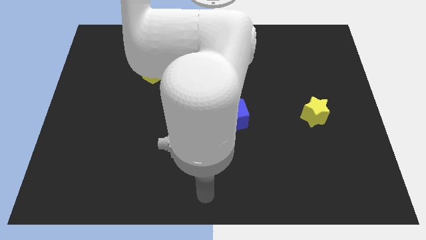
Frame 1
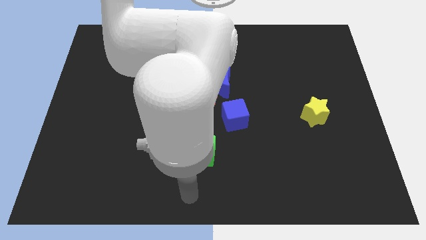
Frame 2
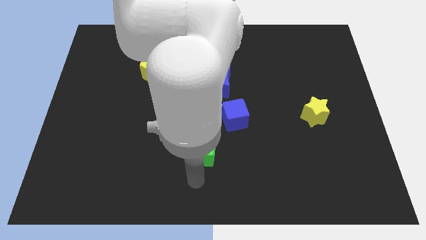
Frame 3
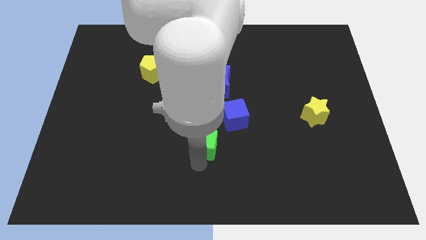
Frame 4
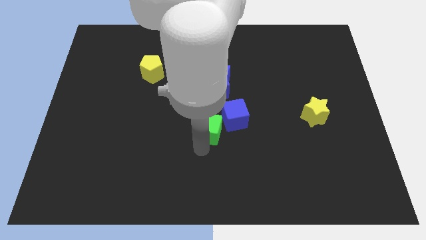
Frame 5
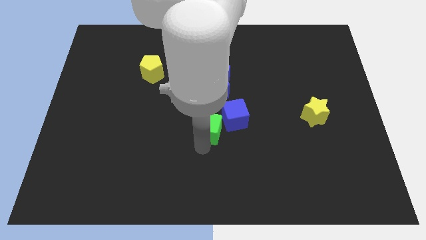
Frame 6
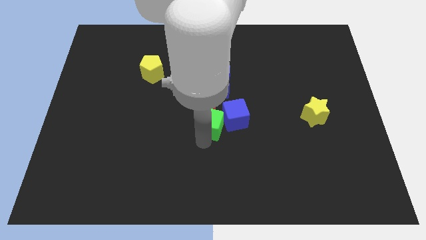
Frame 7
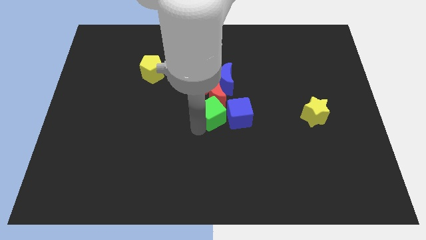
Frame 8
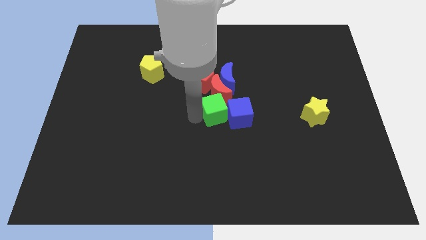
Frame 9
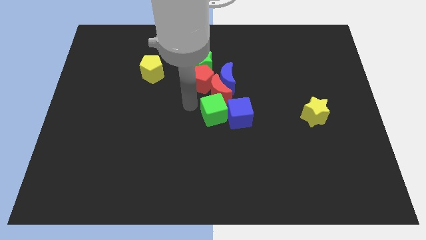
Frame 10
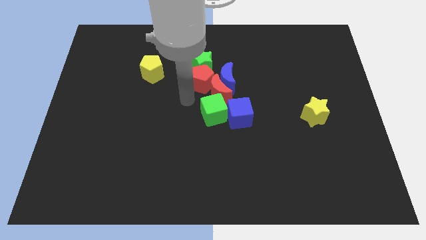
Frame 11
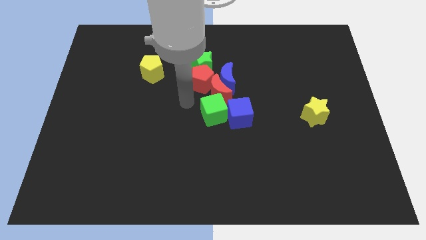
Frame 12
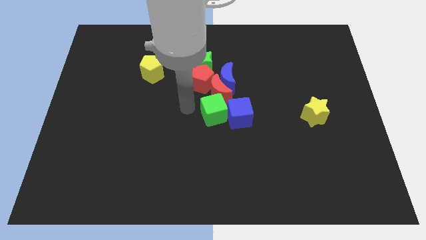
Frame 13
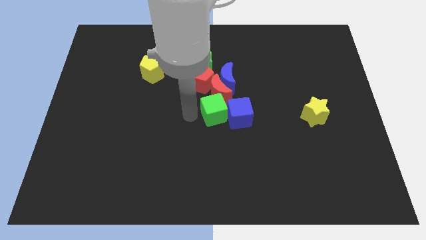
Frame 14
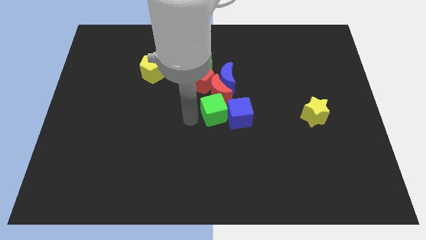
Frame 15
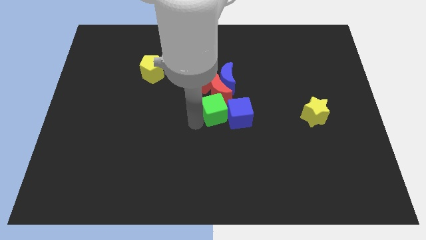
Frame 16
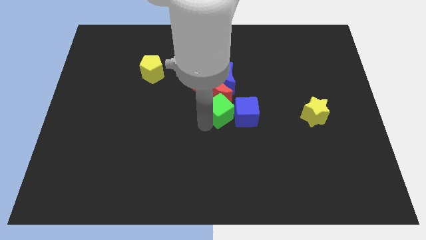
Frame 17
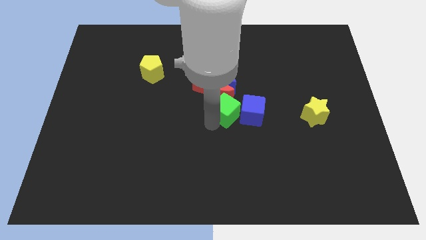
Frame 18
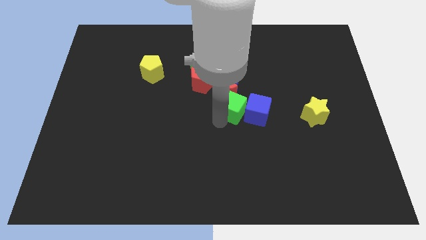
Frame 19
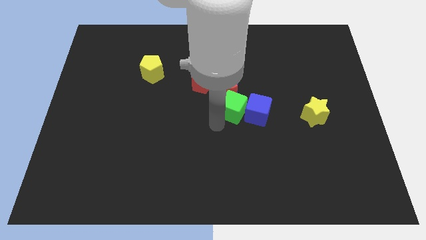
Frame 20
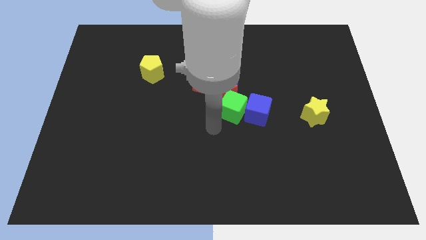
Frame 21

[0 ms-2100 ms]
move the green cube close to the blue cube

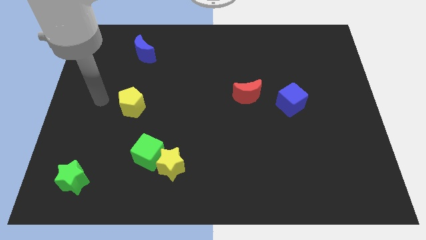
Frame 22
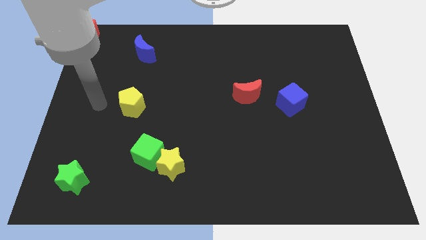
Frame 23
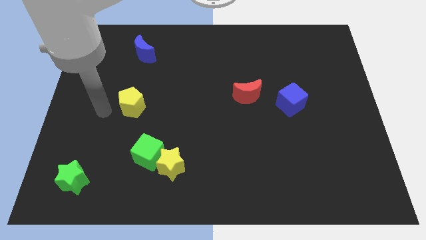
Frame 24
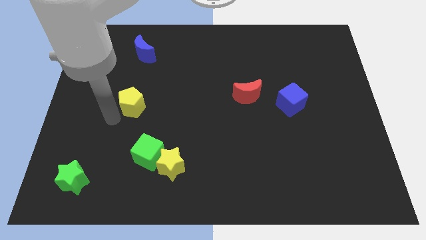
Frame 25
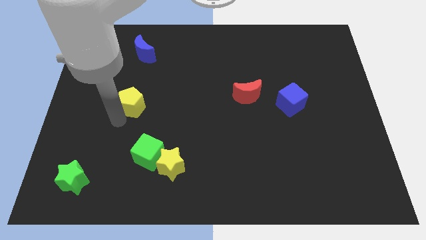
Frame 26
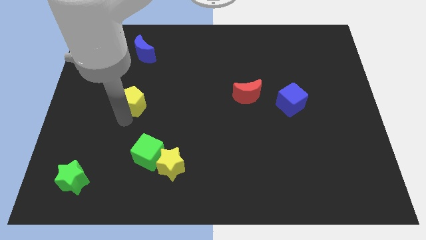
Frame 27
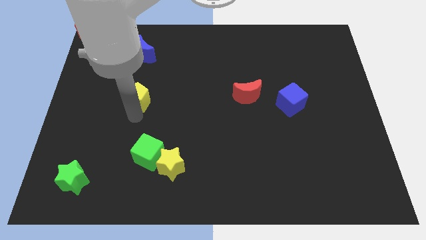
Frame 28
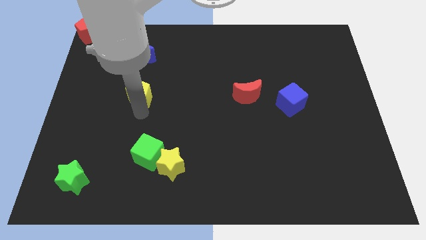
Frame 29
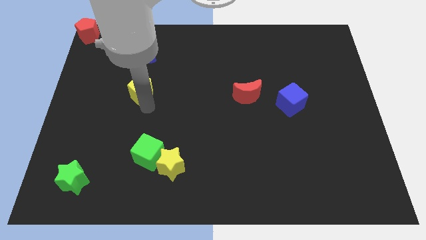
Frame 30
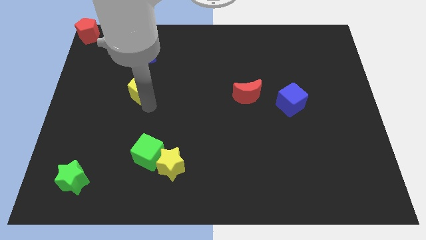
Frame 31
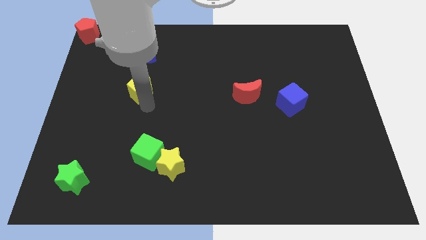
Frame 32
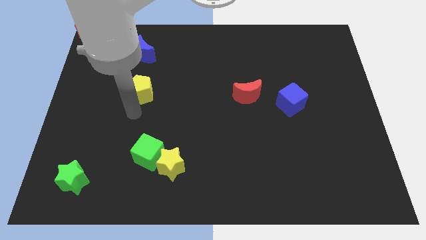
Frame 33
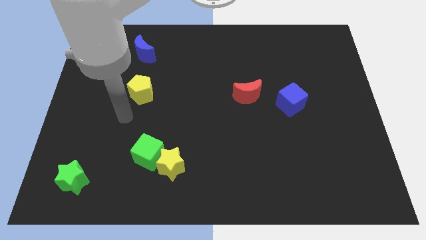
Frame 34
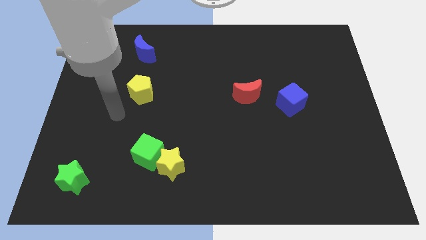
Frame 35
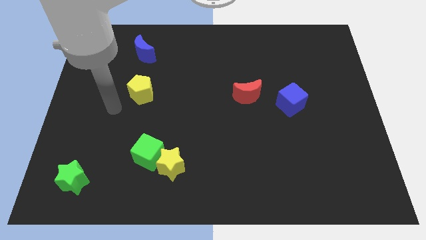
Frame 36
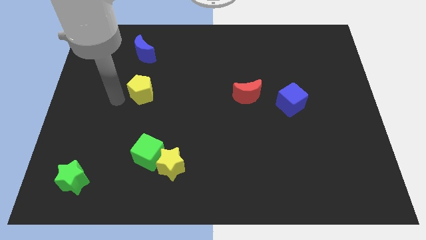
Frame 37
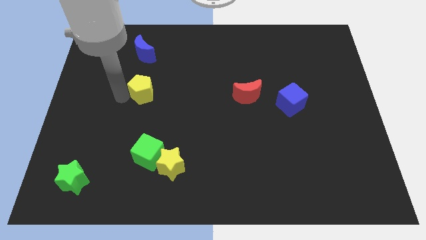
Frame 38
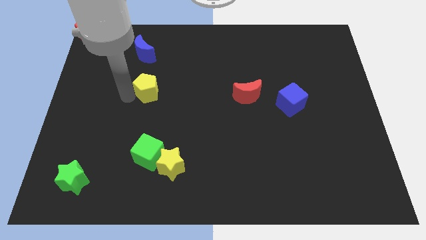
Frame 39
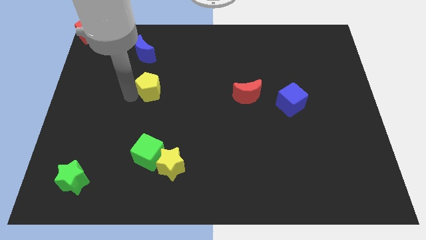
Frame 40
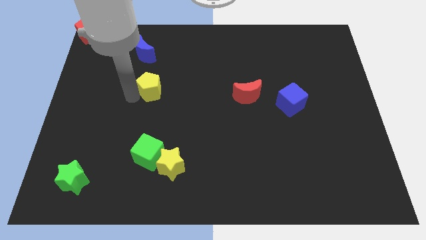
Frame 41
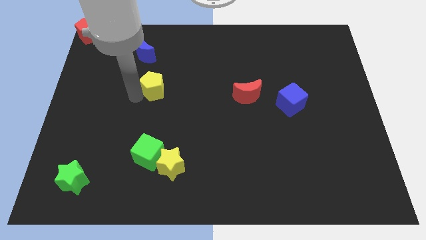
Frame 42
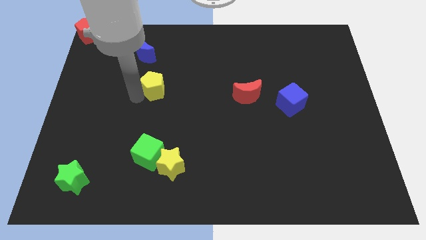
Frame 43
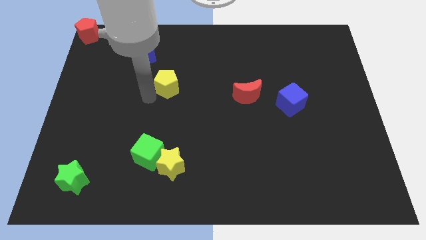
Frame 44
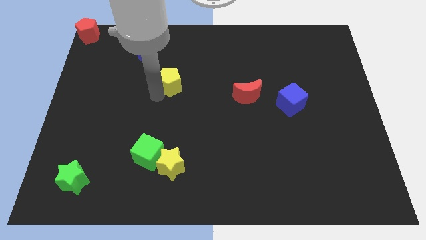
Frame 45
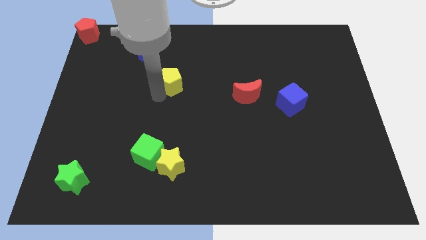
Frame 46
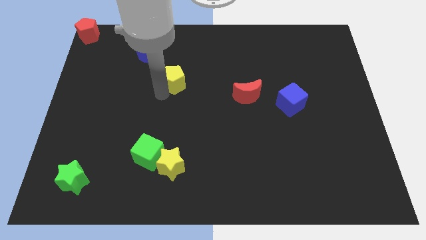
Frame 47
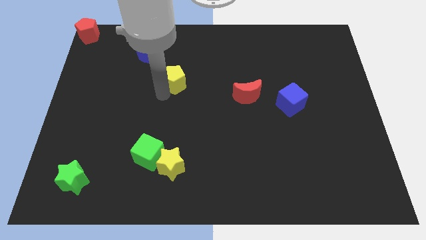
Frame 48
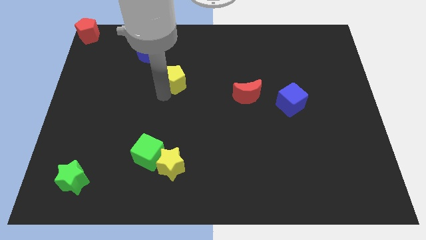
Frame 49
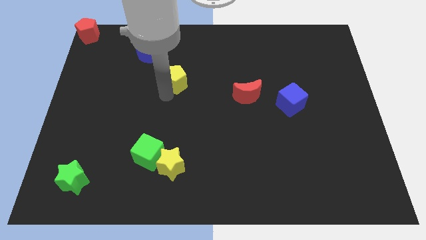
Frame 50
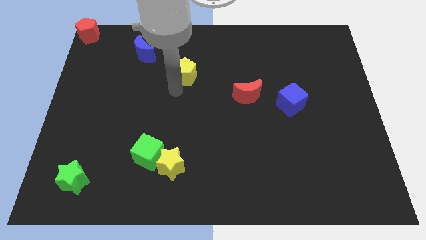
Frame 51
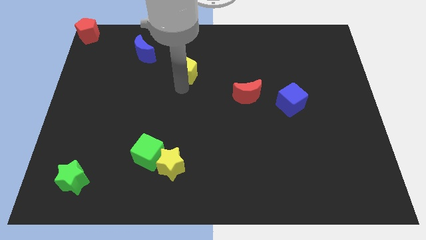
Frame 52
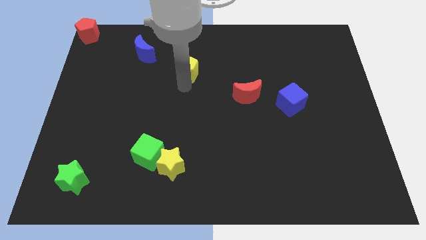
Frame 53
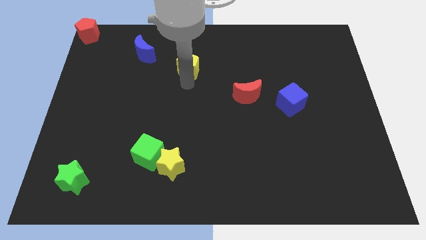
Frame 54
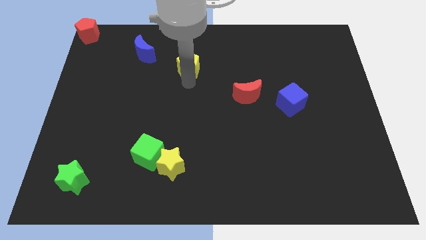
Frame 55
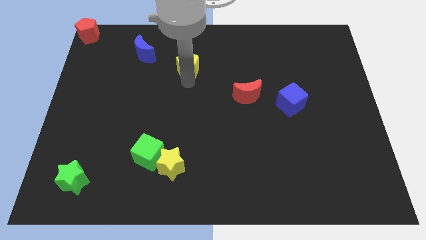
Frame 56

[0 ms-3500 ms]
drag the yellow pentagon diagonally bottom right to the blue moon

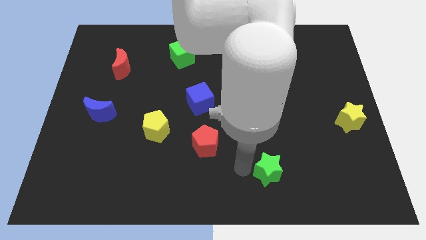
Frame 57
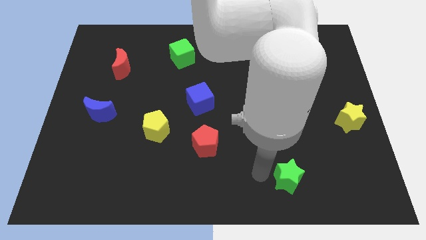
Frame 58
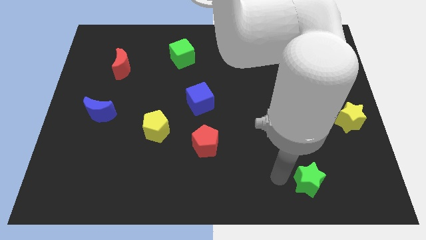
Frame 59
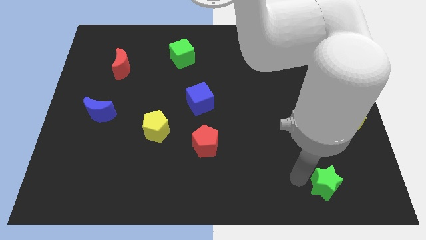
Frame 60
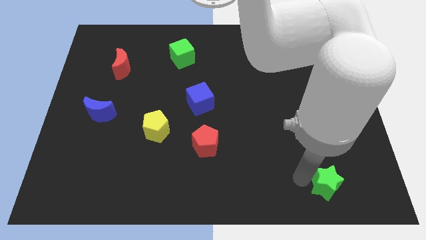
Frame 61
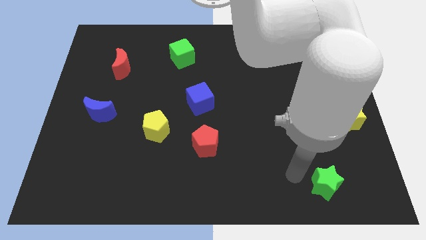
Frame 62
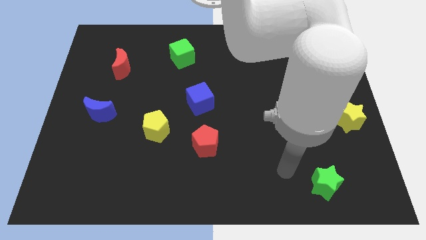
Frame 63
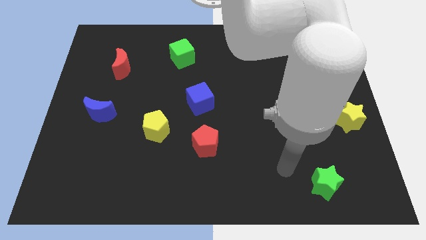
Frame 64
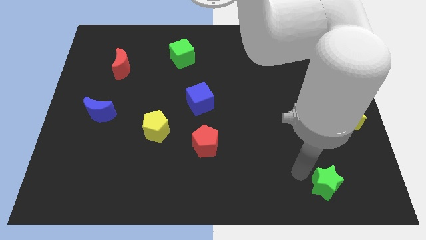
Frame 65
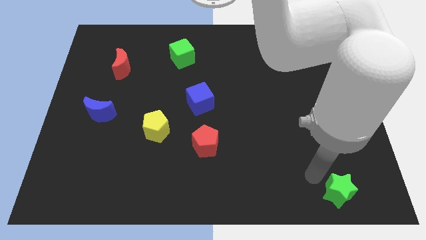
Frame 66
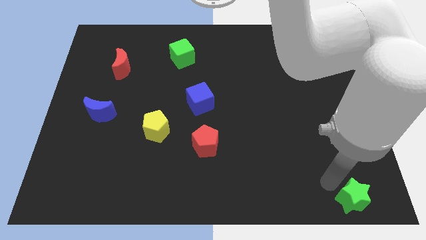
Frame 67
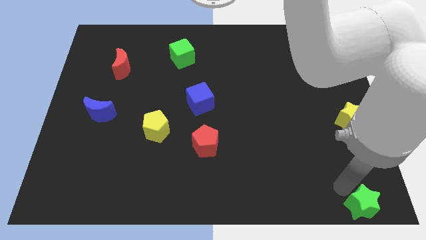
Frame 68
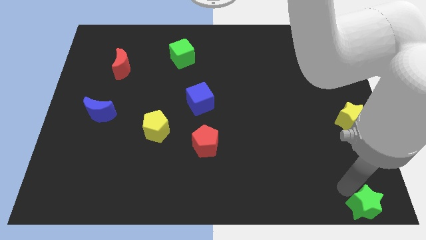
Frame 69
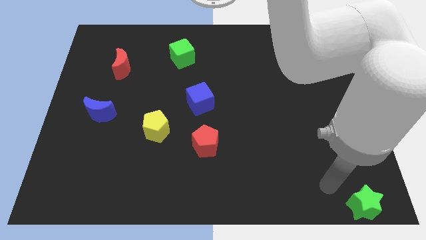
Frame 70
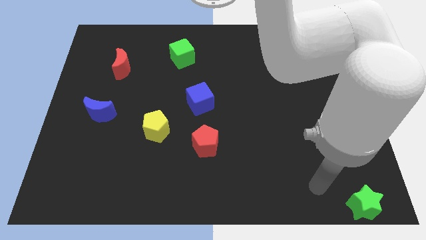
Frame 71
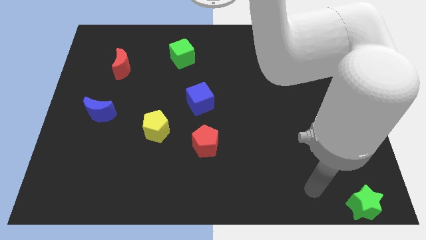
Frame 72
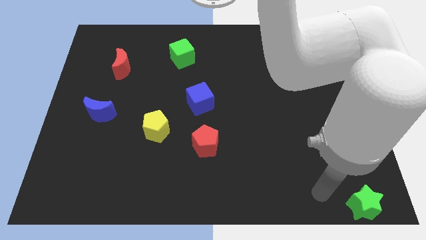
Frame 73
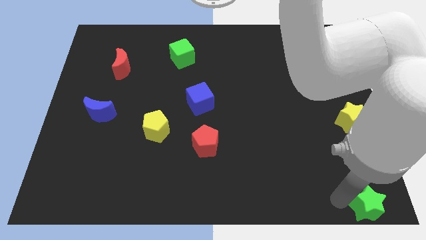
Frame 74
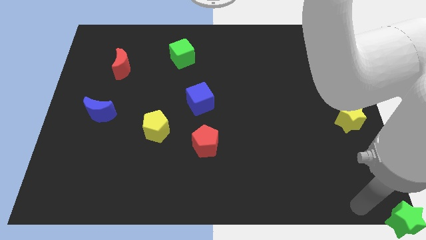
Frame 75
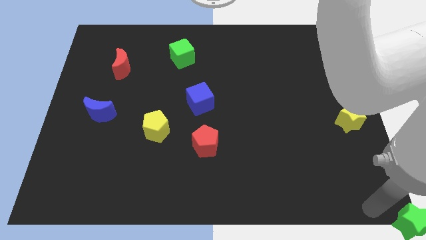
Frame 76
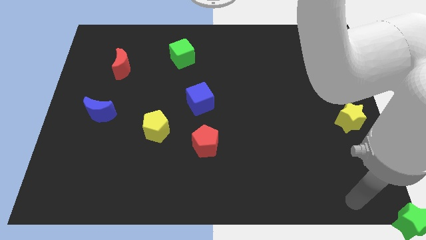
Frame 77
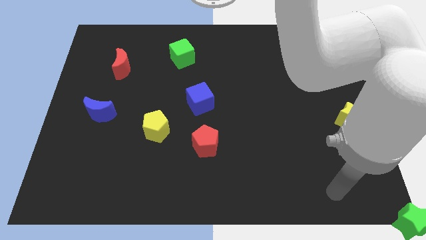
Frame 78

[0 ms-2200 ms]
drag the green star towards the bottom right

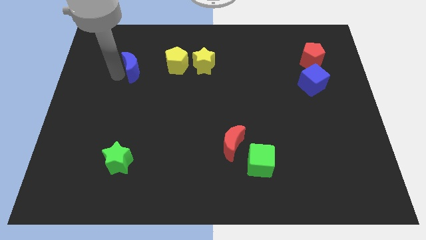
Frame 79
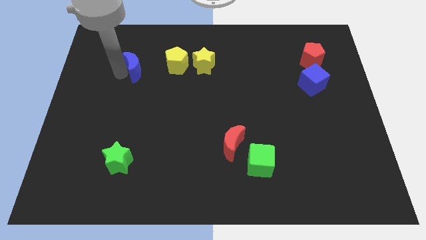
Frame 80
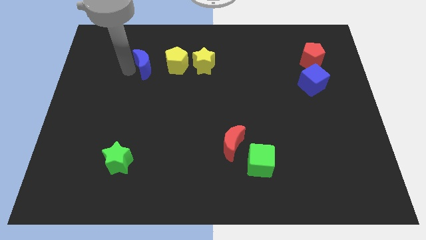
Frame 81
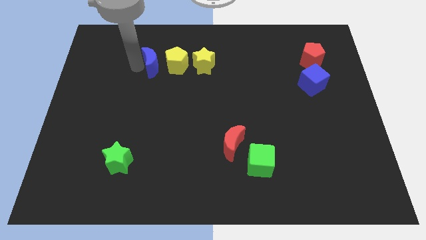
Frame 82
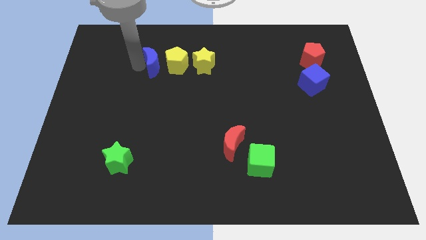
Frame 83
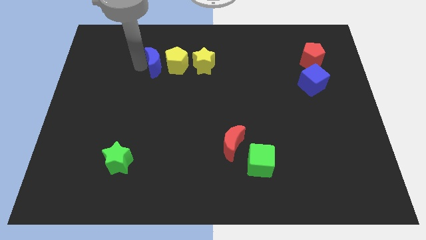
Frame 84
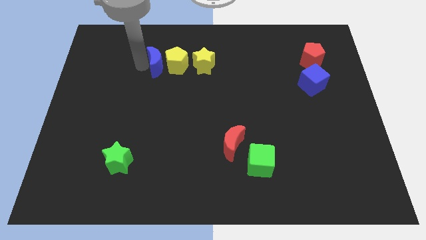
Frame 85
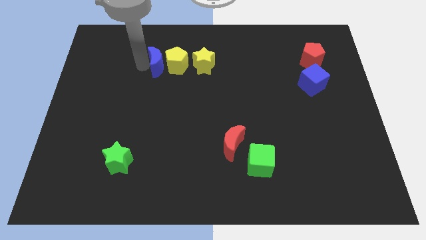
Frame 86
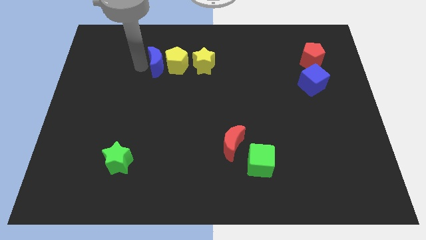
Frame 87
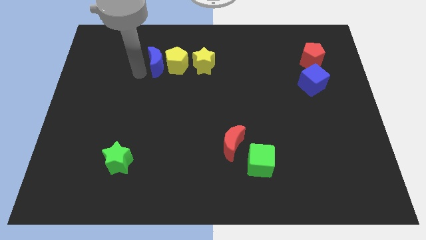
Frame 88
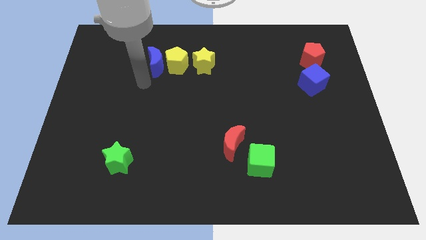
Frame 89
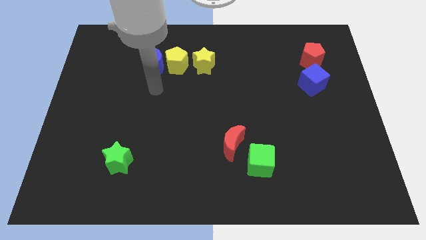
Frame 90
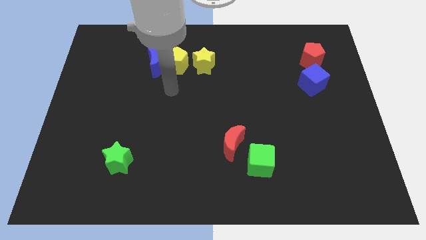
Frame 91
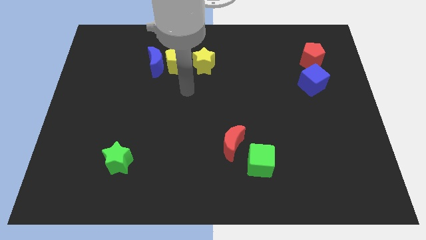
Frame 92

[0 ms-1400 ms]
place the blue moon close to the yellow pentagon
